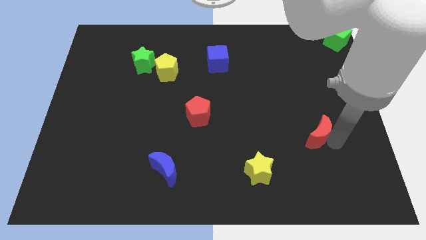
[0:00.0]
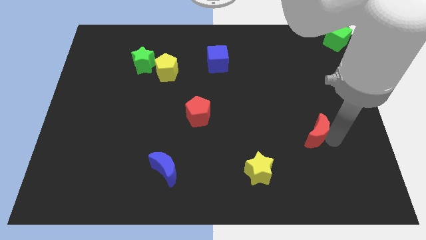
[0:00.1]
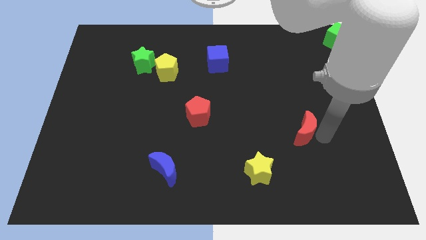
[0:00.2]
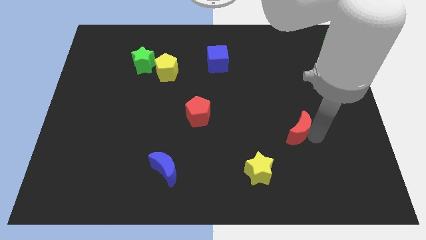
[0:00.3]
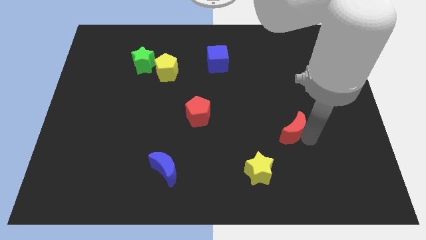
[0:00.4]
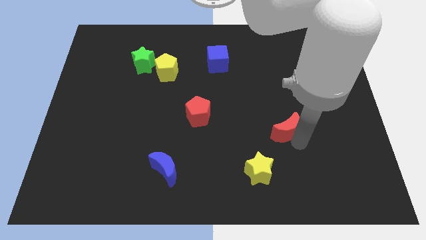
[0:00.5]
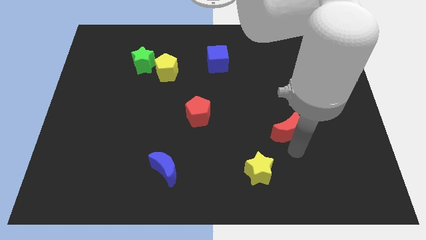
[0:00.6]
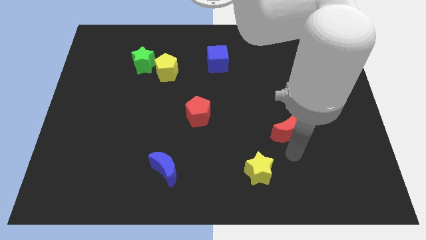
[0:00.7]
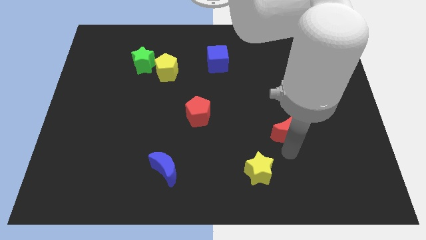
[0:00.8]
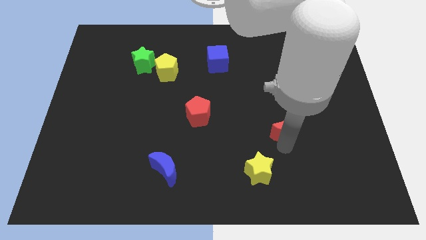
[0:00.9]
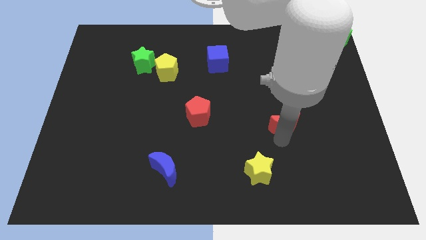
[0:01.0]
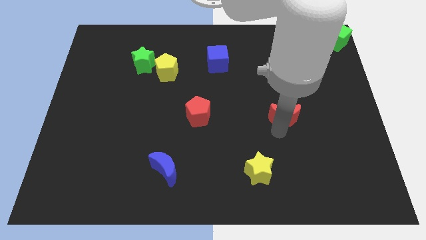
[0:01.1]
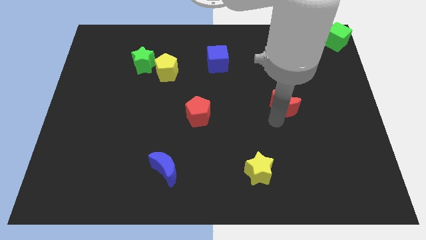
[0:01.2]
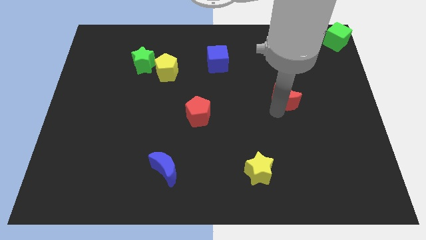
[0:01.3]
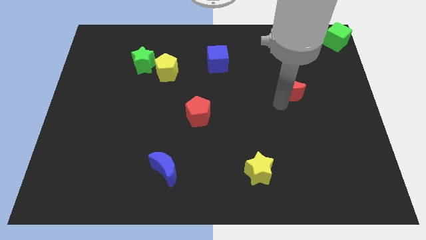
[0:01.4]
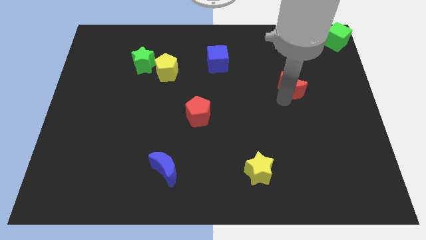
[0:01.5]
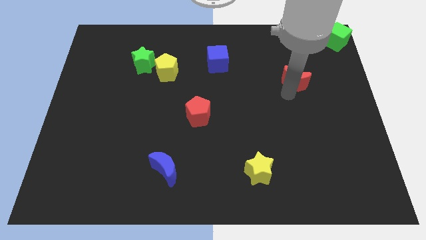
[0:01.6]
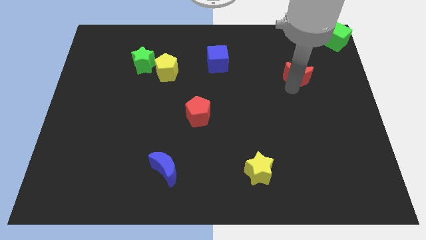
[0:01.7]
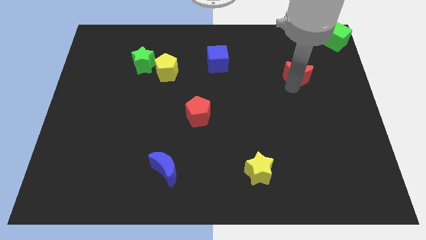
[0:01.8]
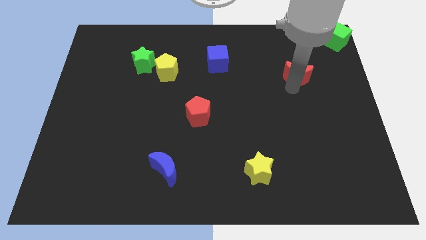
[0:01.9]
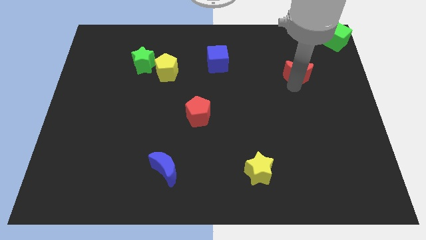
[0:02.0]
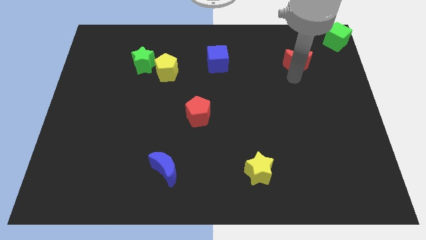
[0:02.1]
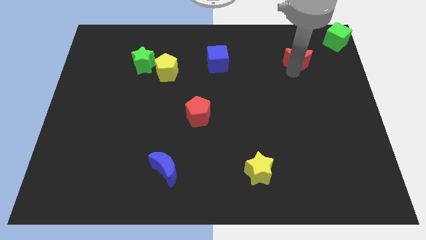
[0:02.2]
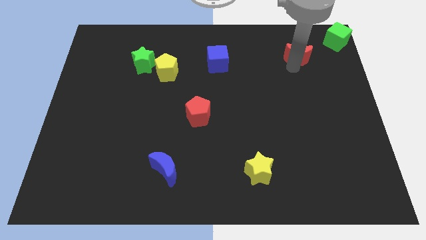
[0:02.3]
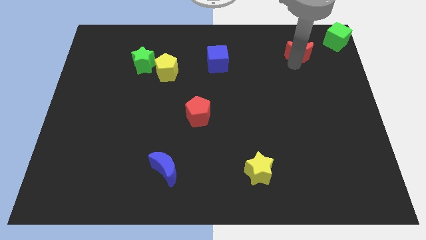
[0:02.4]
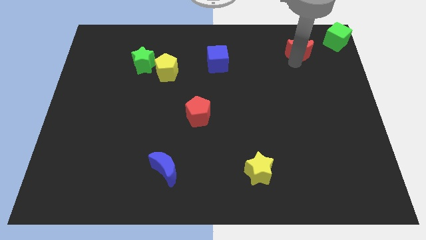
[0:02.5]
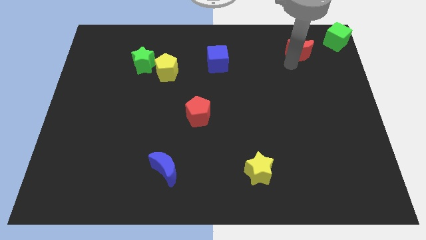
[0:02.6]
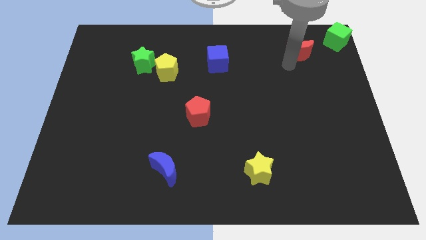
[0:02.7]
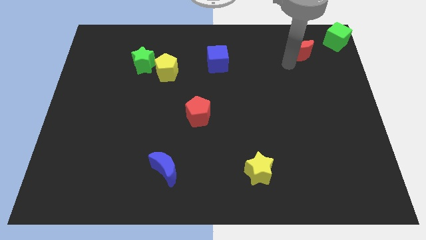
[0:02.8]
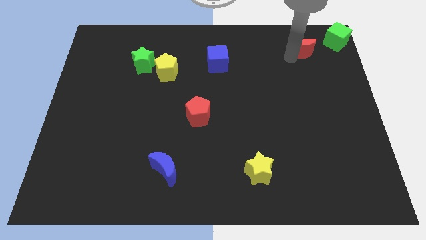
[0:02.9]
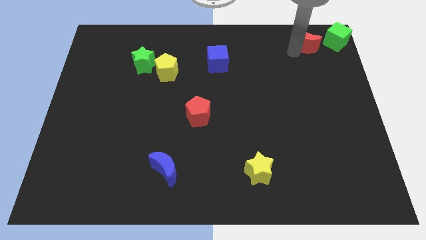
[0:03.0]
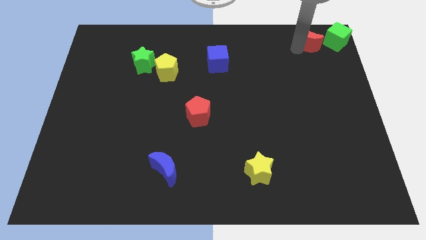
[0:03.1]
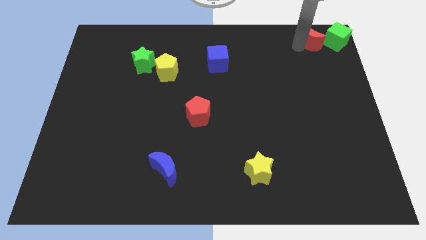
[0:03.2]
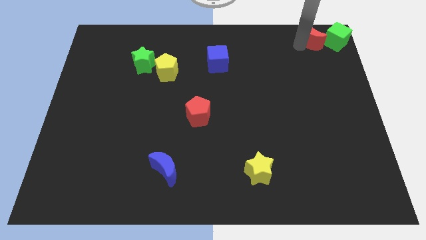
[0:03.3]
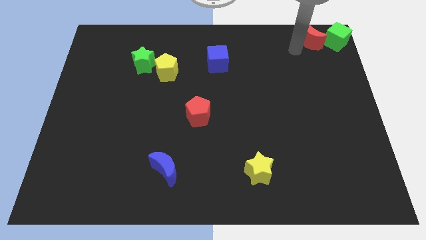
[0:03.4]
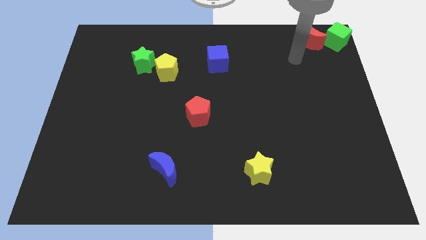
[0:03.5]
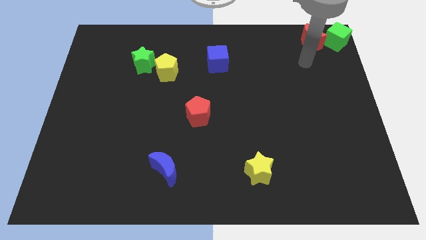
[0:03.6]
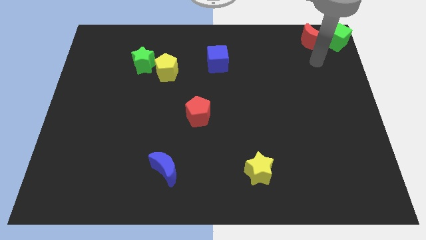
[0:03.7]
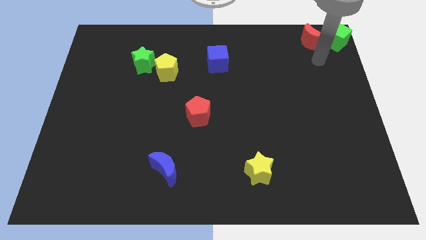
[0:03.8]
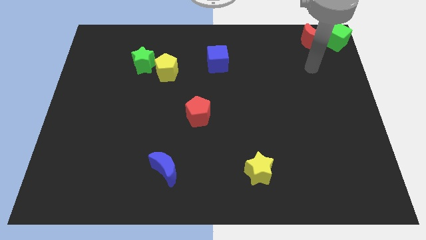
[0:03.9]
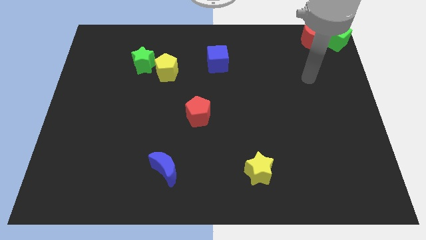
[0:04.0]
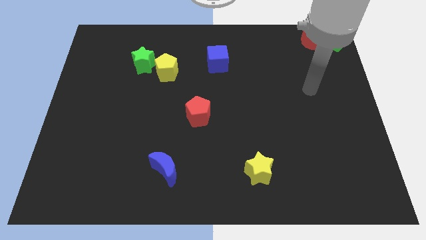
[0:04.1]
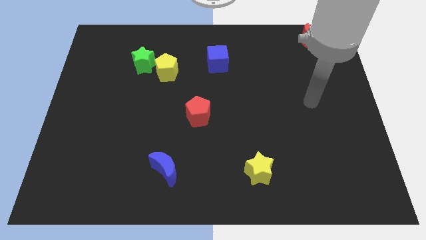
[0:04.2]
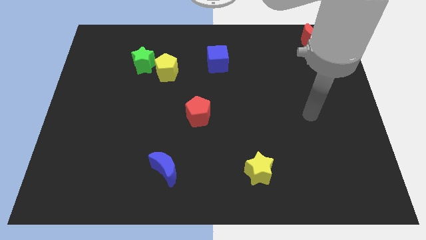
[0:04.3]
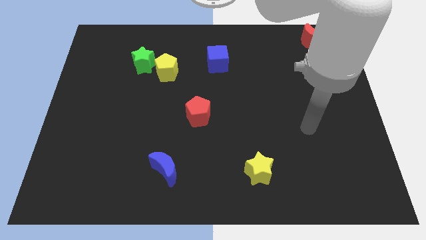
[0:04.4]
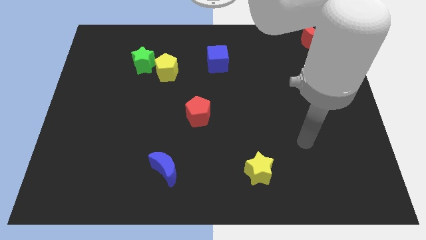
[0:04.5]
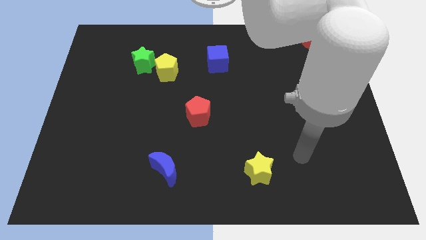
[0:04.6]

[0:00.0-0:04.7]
place the red moon at the top right side of the board

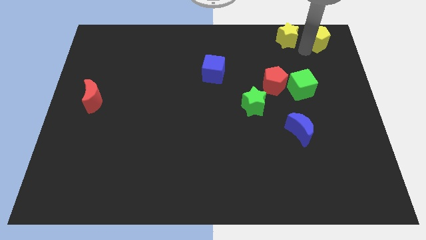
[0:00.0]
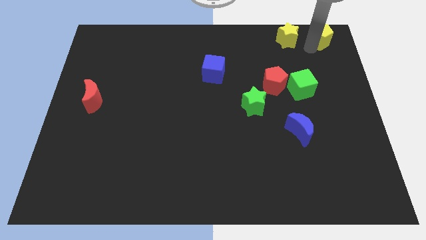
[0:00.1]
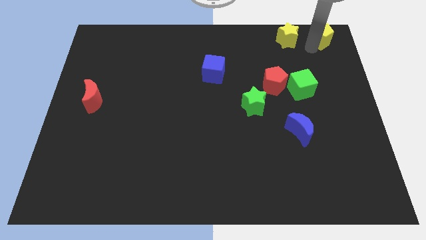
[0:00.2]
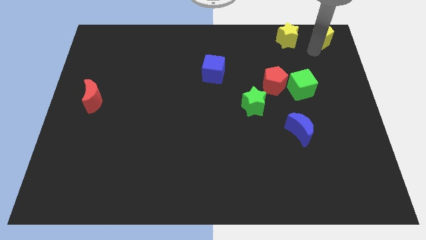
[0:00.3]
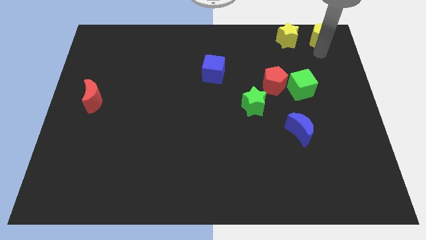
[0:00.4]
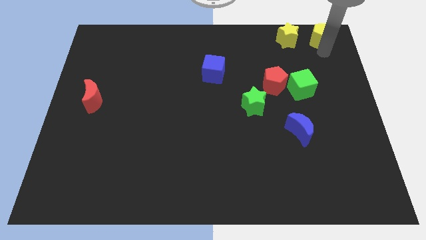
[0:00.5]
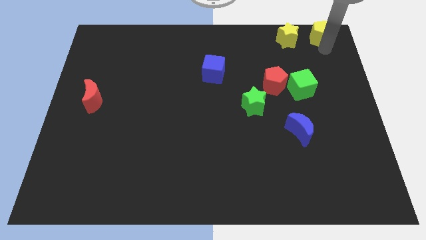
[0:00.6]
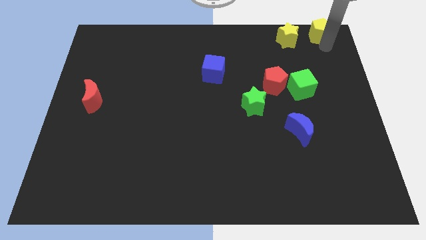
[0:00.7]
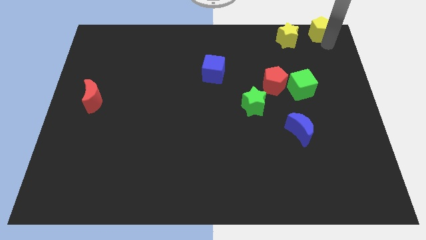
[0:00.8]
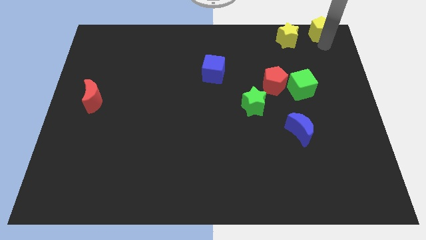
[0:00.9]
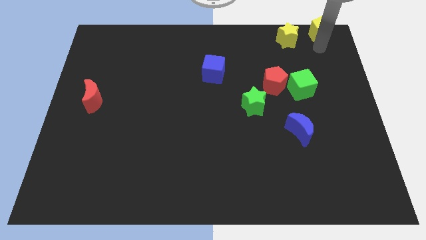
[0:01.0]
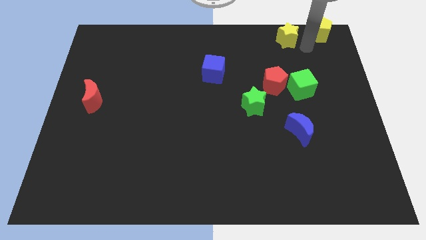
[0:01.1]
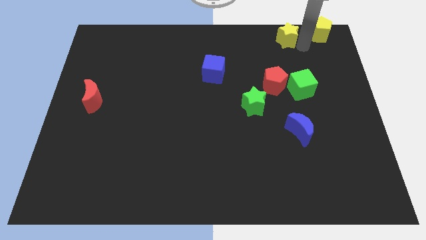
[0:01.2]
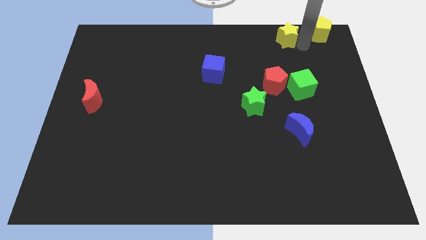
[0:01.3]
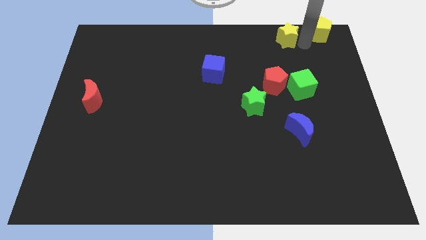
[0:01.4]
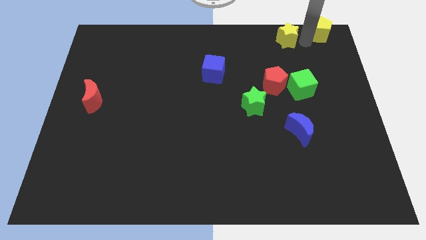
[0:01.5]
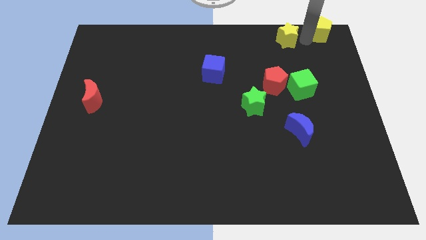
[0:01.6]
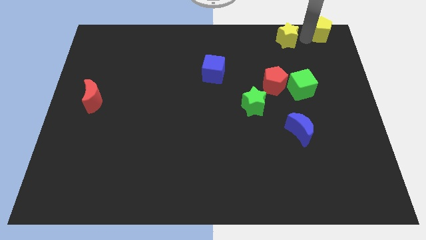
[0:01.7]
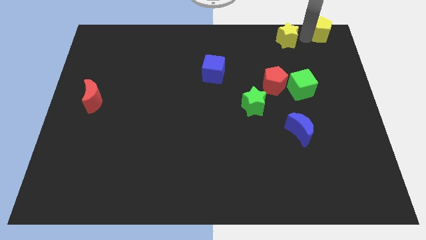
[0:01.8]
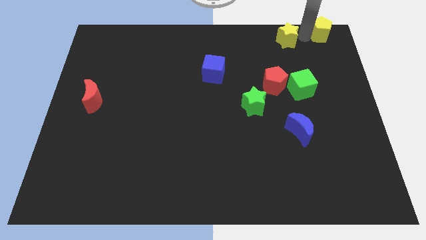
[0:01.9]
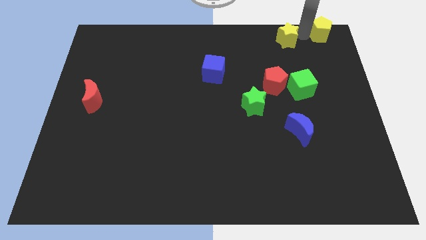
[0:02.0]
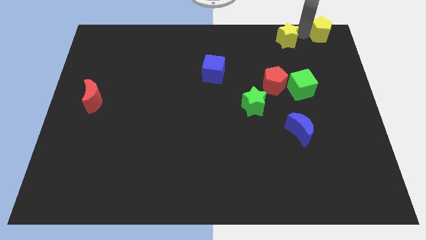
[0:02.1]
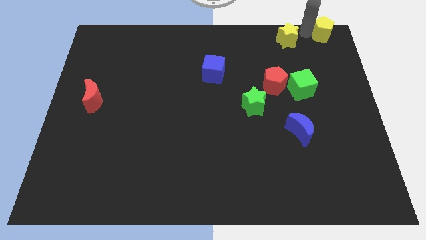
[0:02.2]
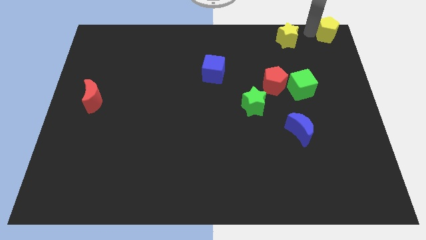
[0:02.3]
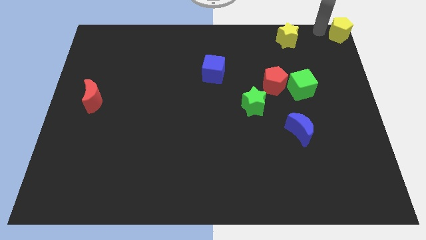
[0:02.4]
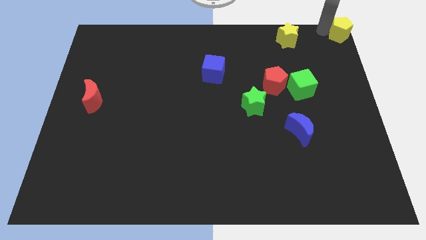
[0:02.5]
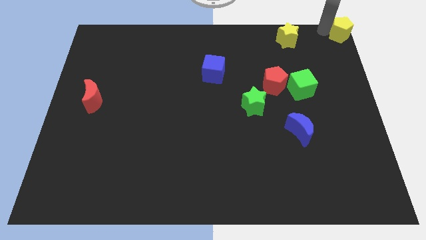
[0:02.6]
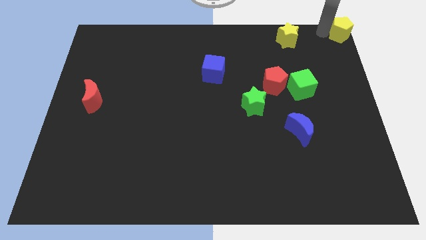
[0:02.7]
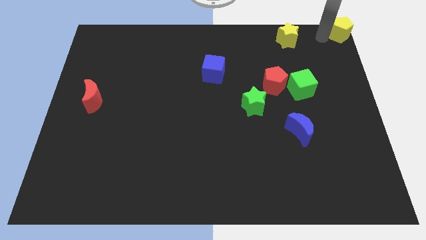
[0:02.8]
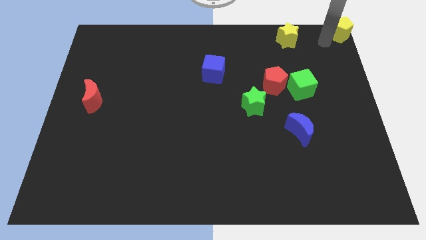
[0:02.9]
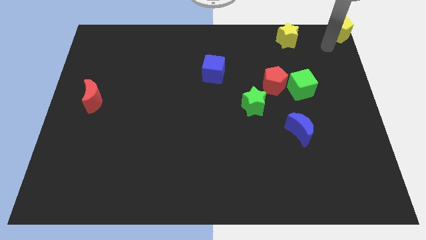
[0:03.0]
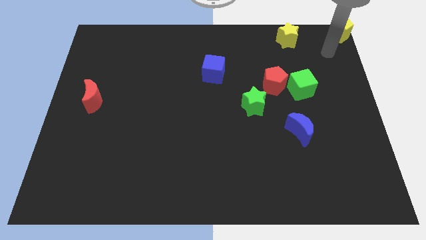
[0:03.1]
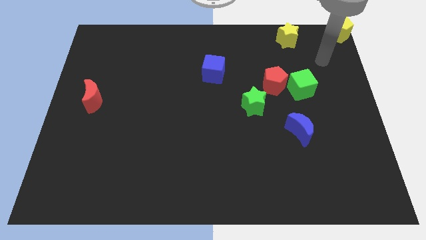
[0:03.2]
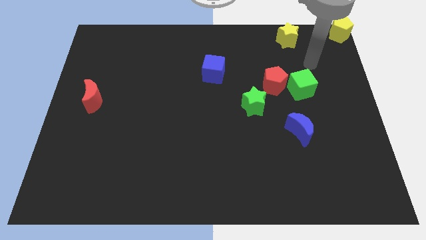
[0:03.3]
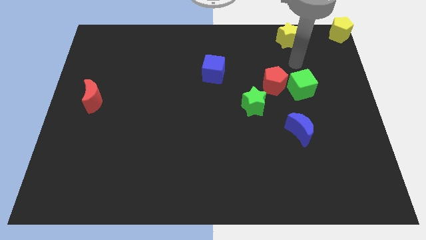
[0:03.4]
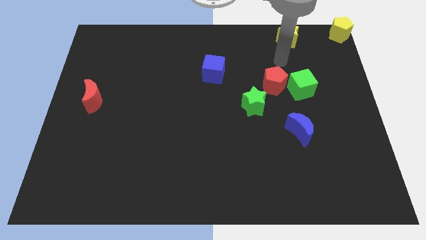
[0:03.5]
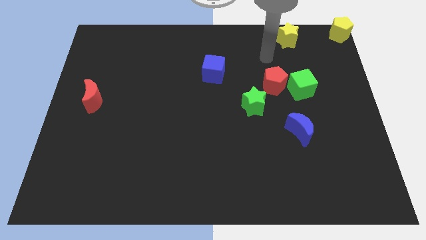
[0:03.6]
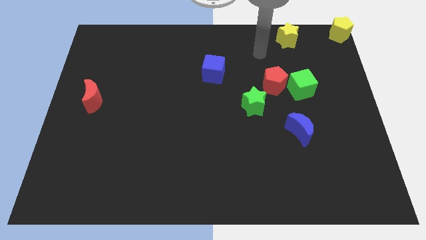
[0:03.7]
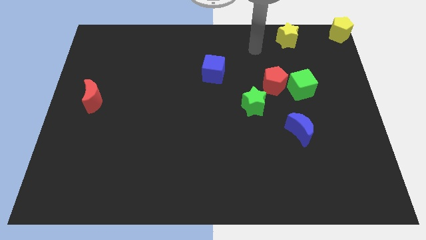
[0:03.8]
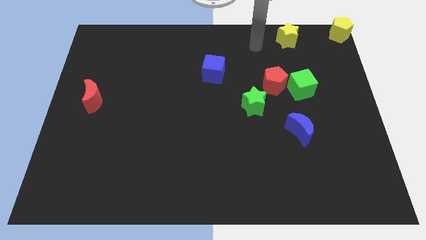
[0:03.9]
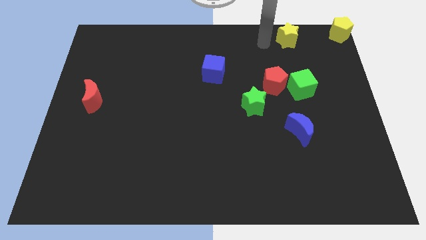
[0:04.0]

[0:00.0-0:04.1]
move yellow pentagon to the the top right corner
